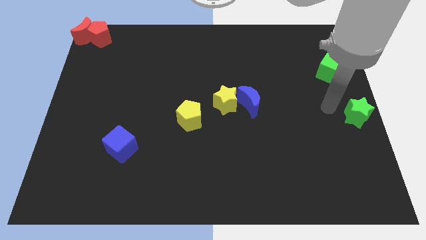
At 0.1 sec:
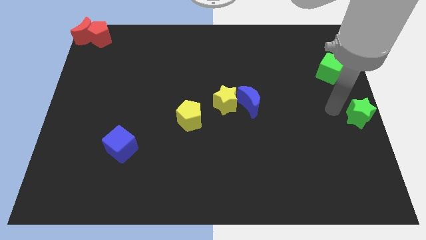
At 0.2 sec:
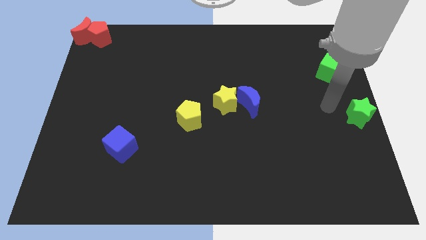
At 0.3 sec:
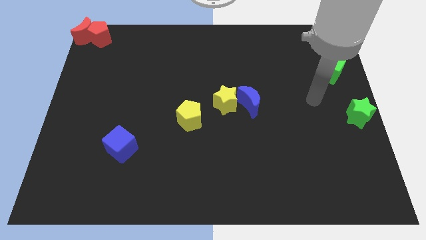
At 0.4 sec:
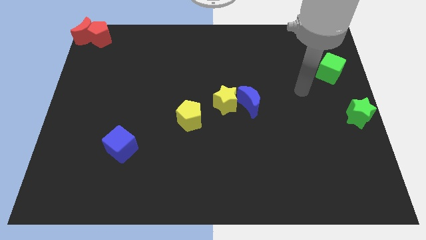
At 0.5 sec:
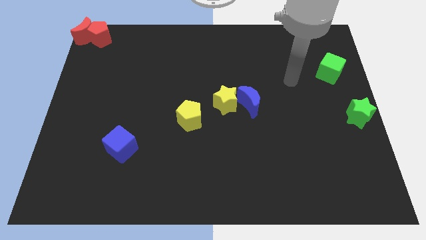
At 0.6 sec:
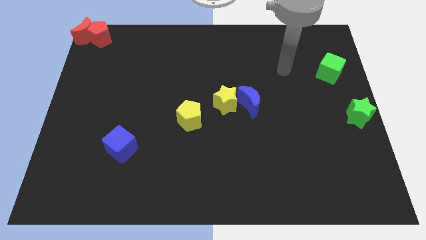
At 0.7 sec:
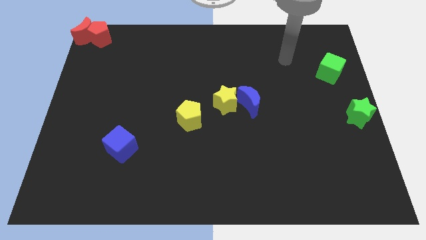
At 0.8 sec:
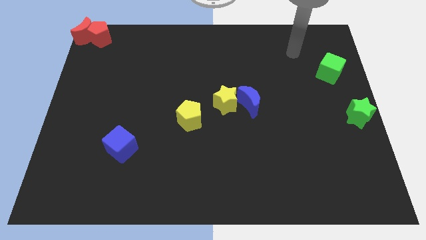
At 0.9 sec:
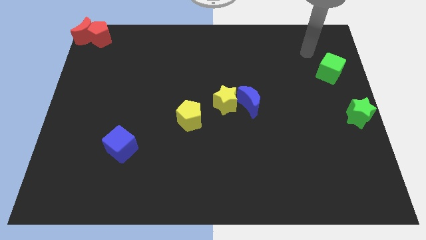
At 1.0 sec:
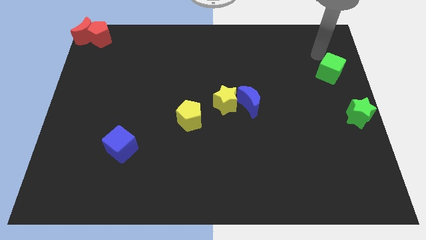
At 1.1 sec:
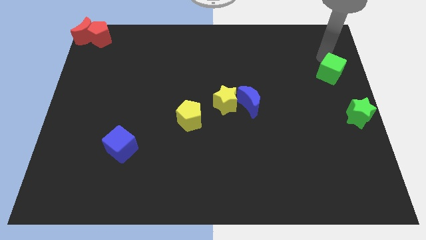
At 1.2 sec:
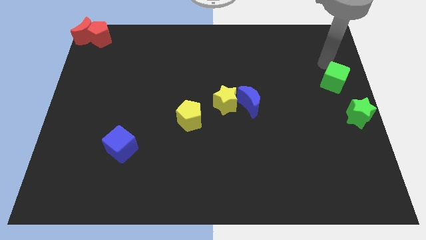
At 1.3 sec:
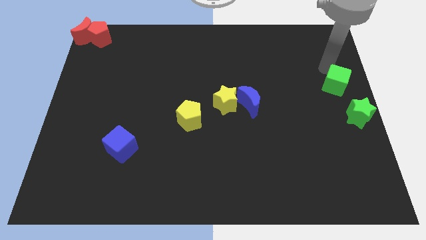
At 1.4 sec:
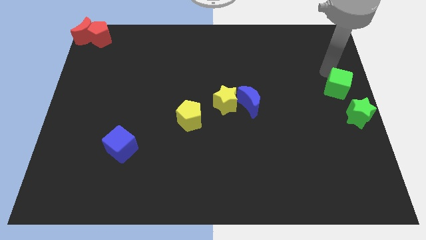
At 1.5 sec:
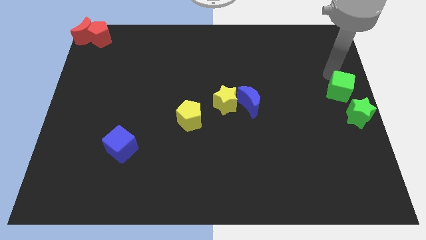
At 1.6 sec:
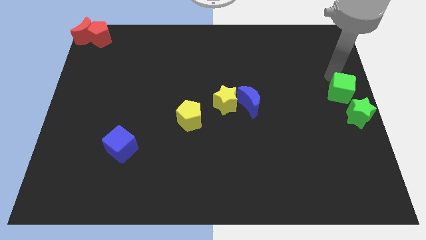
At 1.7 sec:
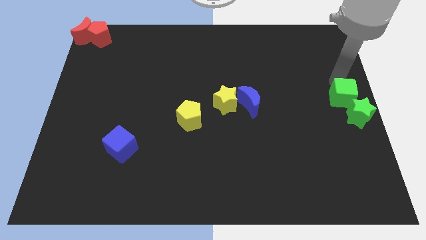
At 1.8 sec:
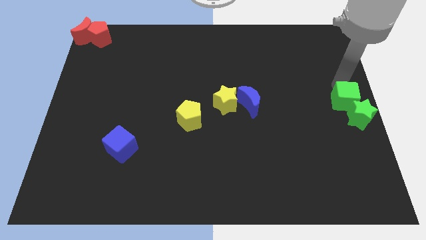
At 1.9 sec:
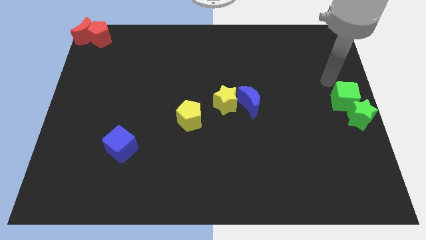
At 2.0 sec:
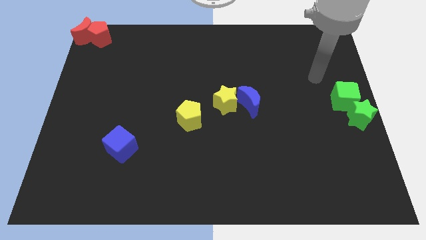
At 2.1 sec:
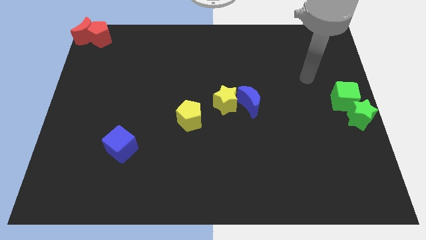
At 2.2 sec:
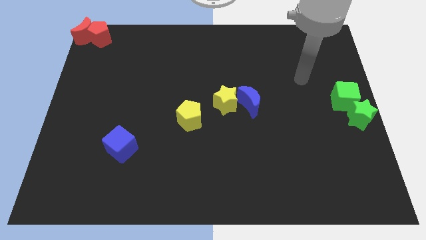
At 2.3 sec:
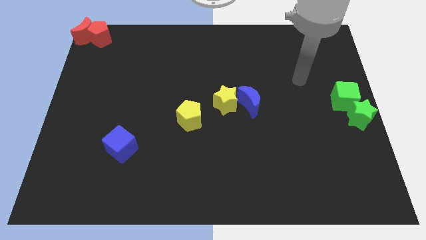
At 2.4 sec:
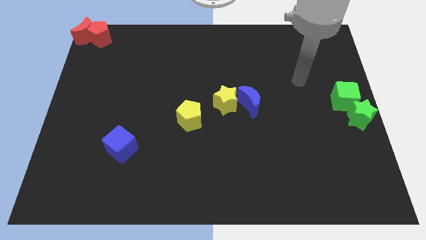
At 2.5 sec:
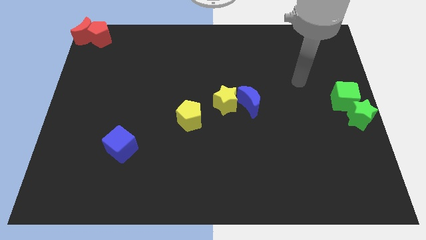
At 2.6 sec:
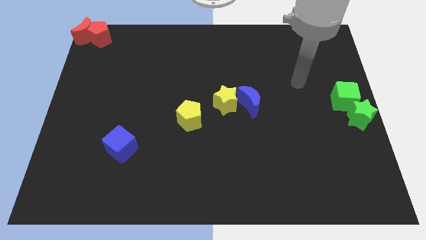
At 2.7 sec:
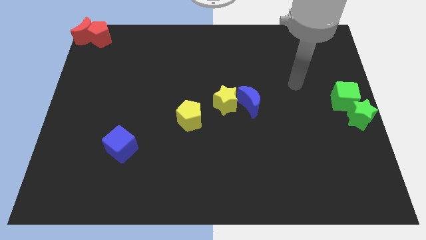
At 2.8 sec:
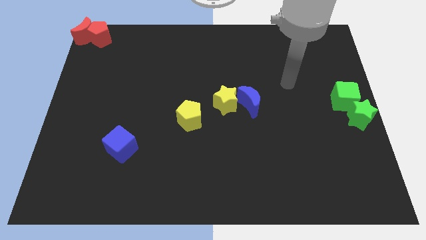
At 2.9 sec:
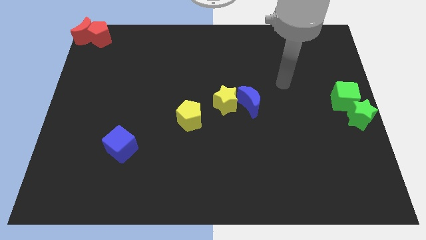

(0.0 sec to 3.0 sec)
place the green cube into the top of the green star

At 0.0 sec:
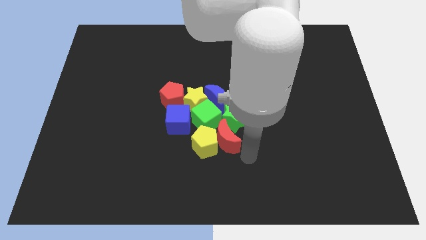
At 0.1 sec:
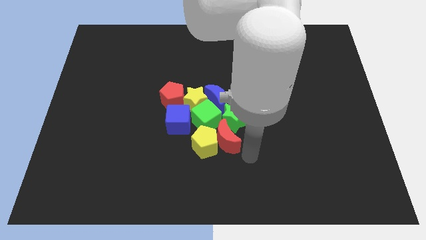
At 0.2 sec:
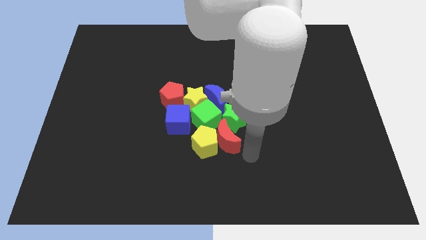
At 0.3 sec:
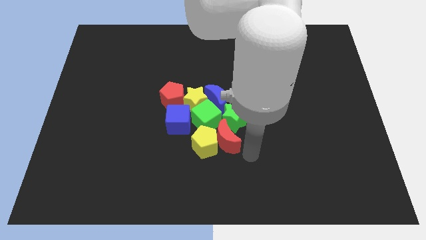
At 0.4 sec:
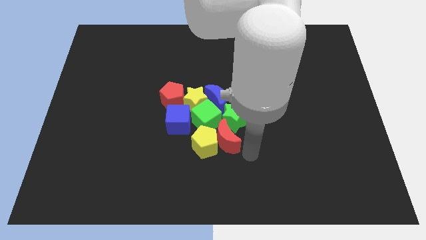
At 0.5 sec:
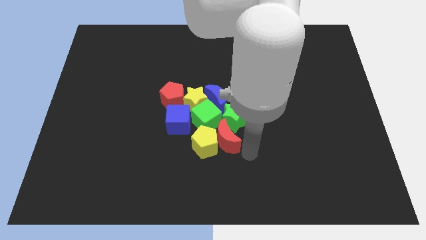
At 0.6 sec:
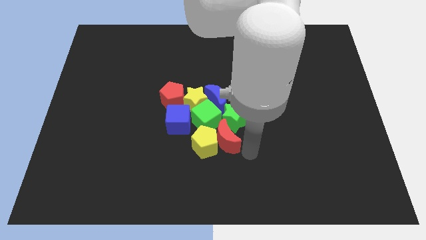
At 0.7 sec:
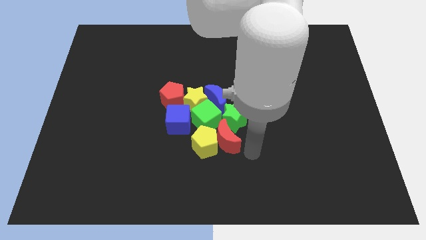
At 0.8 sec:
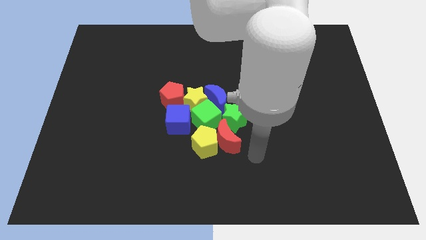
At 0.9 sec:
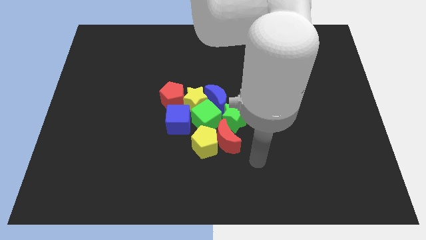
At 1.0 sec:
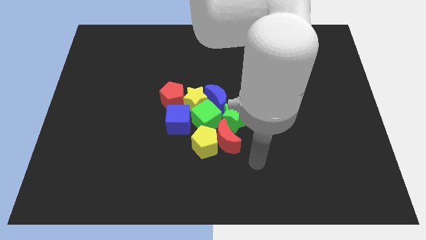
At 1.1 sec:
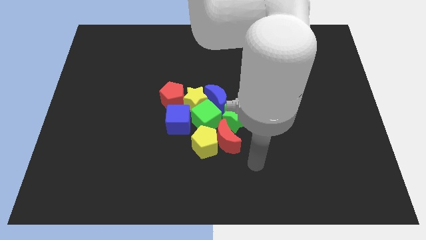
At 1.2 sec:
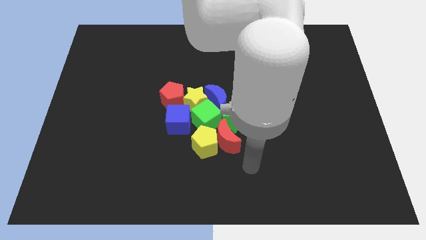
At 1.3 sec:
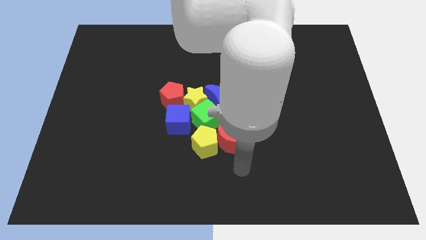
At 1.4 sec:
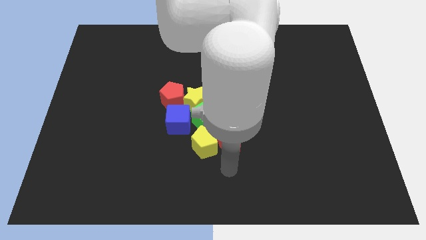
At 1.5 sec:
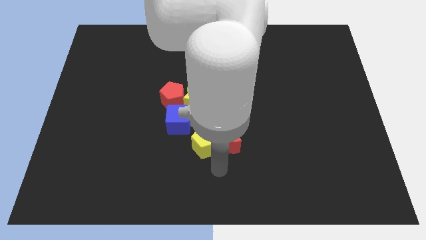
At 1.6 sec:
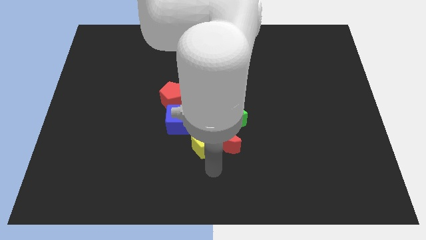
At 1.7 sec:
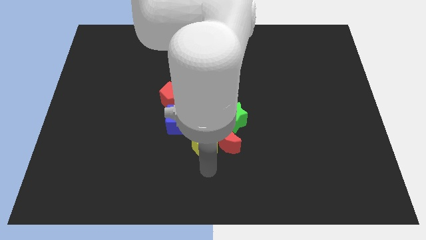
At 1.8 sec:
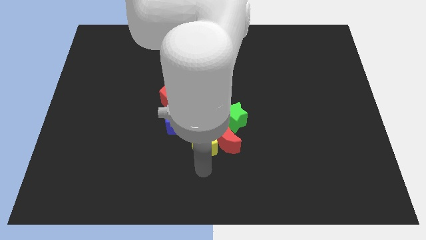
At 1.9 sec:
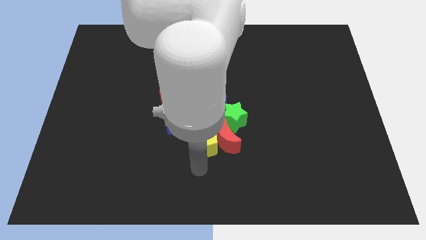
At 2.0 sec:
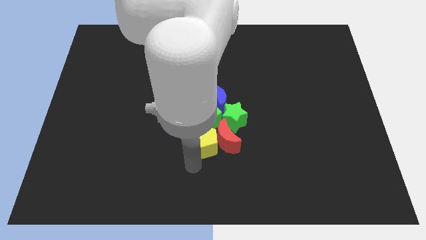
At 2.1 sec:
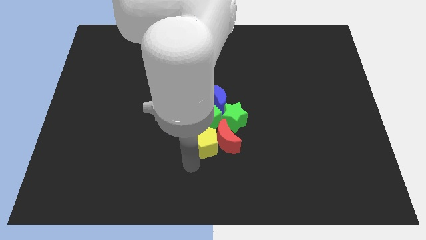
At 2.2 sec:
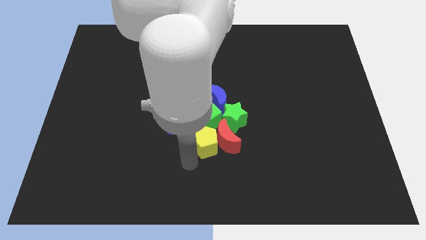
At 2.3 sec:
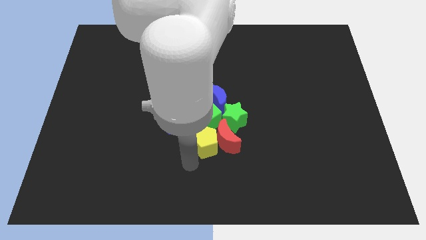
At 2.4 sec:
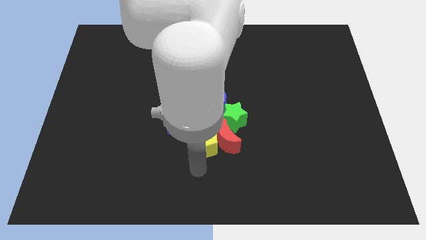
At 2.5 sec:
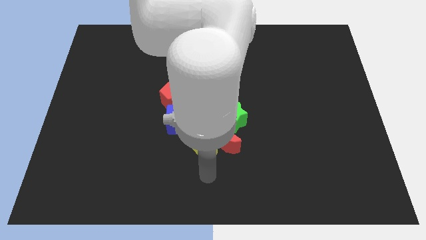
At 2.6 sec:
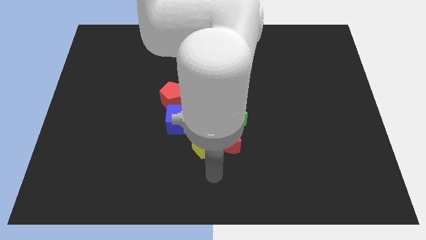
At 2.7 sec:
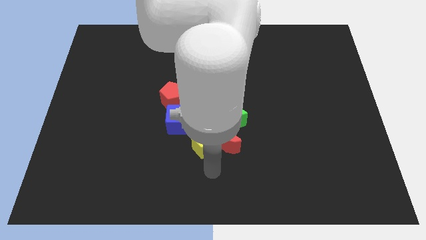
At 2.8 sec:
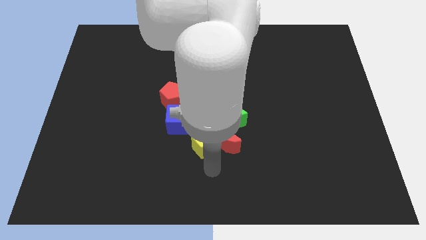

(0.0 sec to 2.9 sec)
place the arm down to the yellow pentagon

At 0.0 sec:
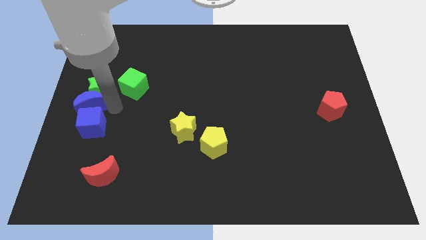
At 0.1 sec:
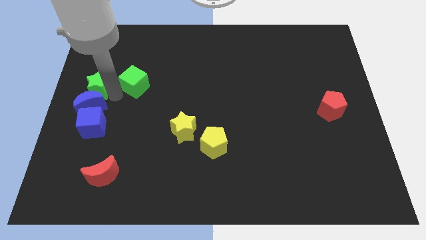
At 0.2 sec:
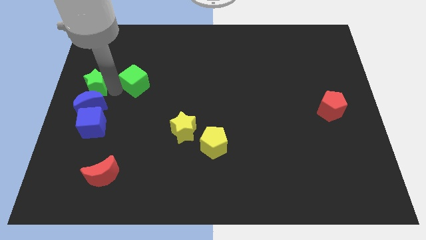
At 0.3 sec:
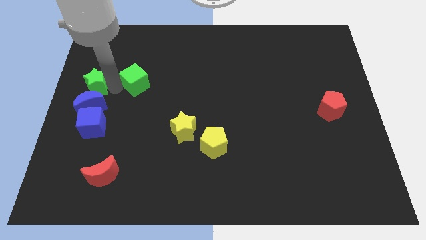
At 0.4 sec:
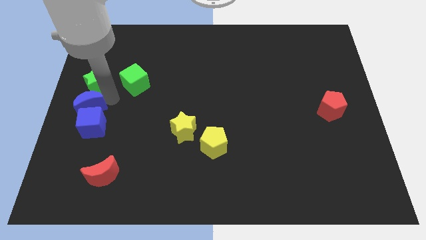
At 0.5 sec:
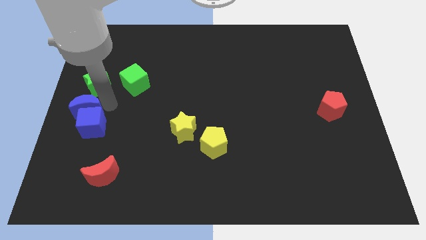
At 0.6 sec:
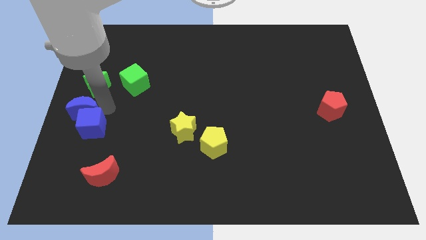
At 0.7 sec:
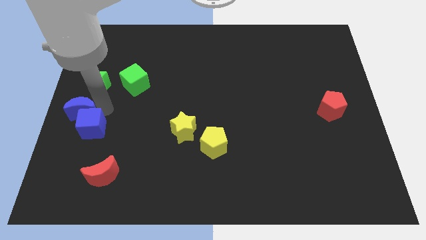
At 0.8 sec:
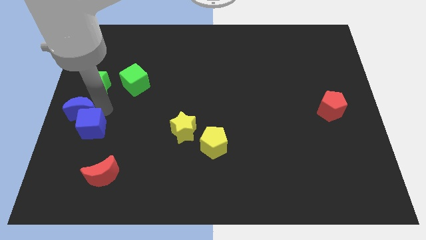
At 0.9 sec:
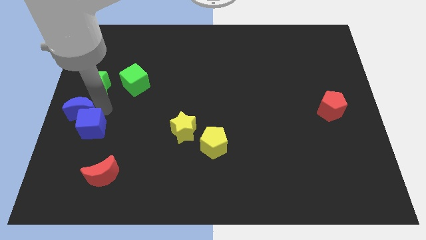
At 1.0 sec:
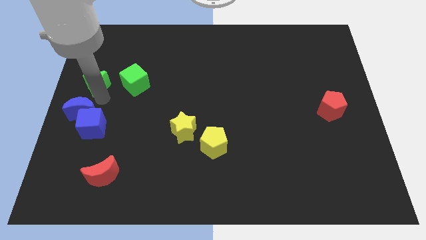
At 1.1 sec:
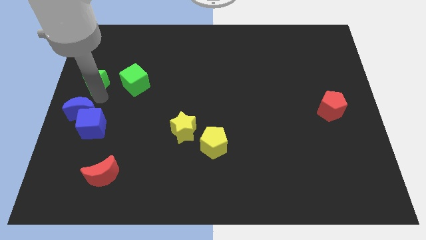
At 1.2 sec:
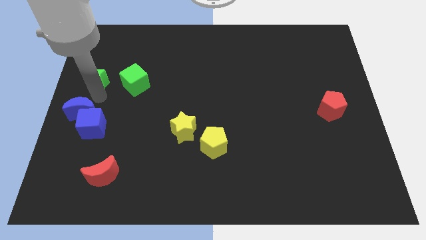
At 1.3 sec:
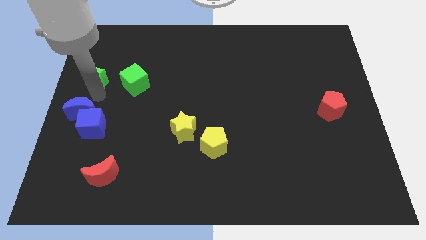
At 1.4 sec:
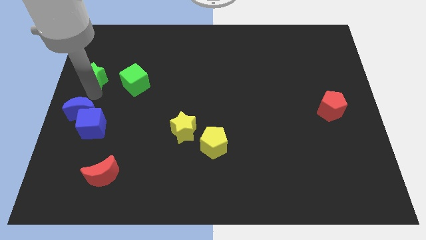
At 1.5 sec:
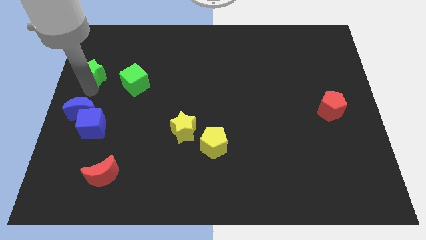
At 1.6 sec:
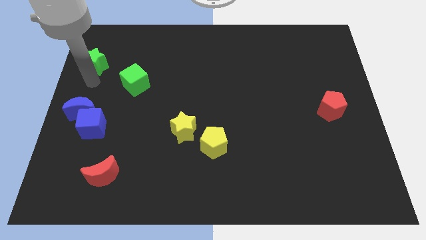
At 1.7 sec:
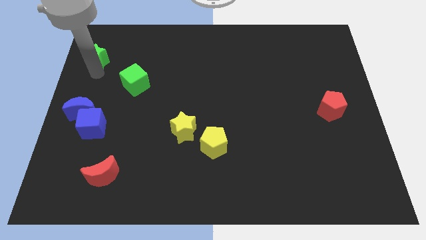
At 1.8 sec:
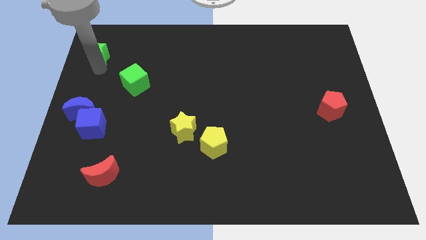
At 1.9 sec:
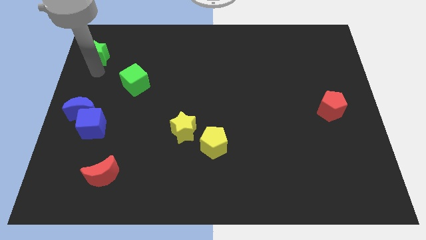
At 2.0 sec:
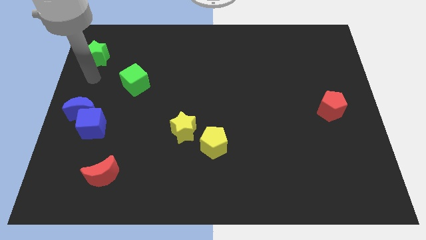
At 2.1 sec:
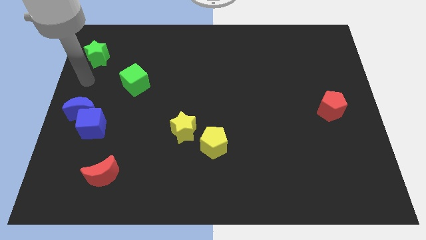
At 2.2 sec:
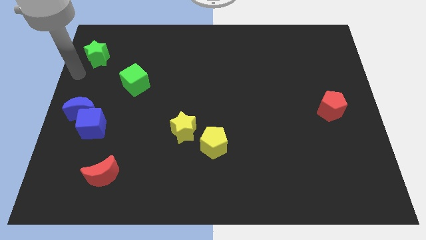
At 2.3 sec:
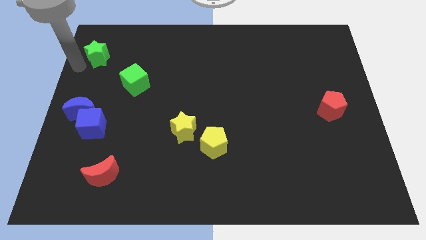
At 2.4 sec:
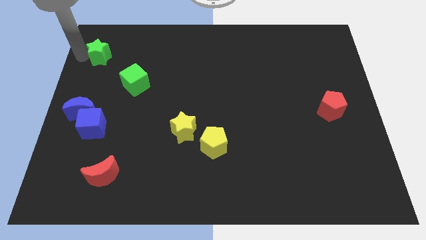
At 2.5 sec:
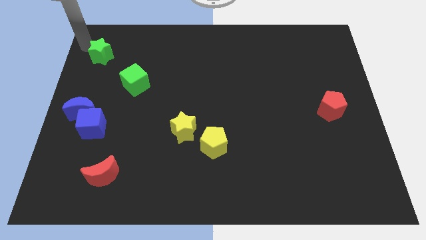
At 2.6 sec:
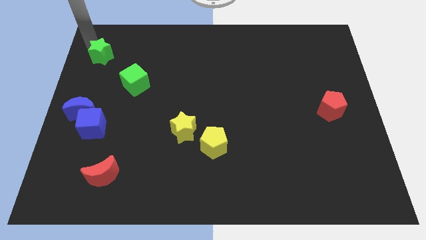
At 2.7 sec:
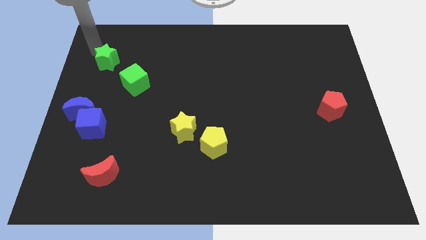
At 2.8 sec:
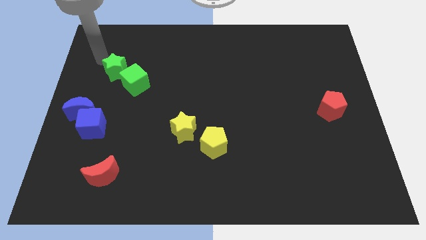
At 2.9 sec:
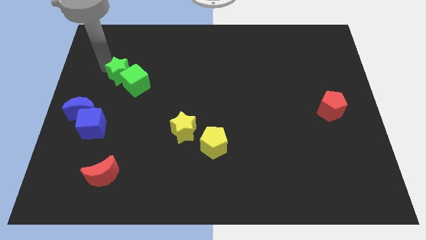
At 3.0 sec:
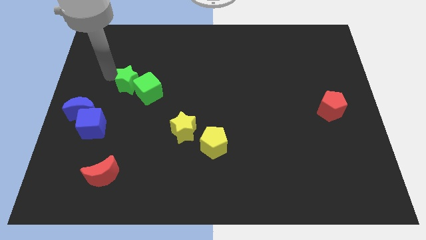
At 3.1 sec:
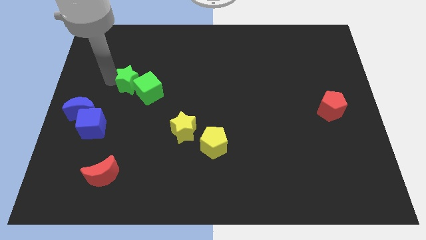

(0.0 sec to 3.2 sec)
push the green star close to the green cube
